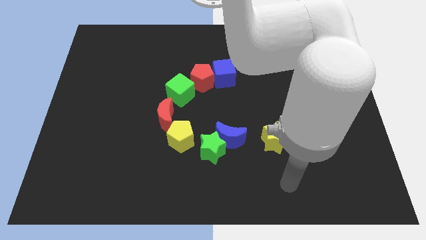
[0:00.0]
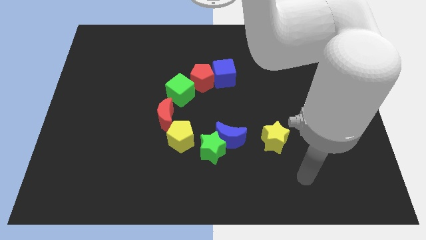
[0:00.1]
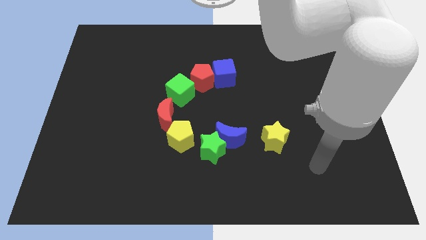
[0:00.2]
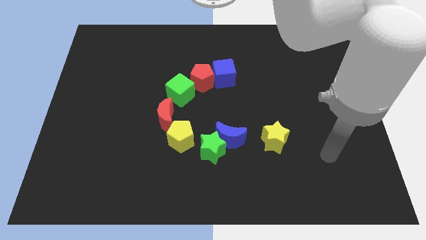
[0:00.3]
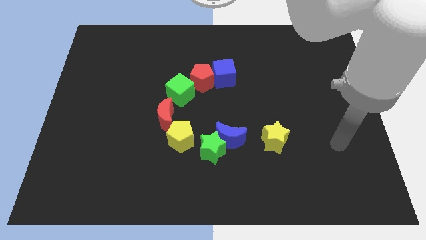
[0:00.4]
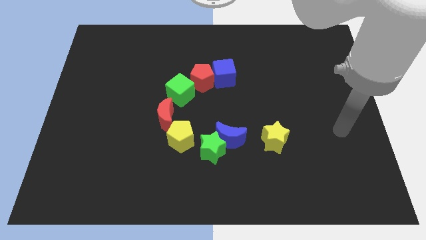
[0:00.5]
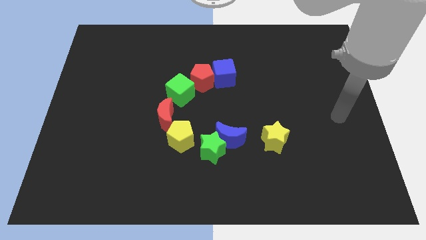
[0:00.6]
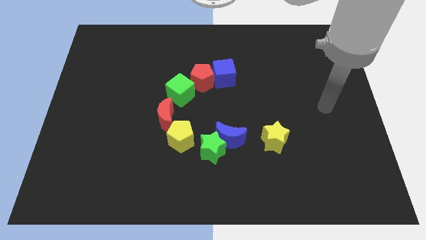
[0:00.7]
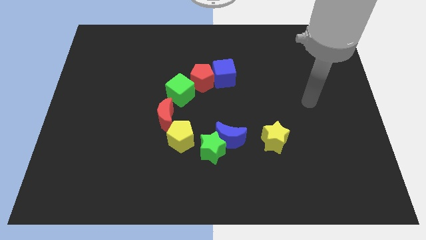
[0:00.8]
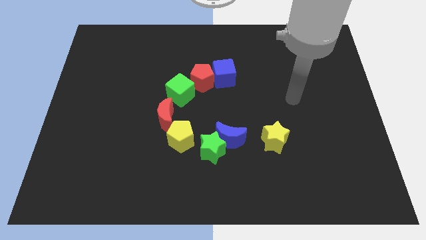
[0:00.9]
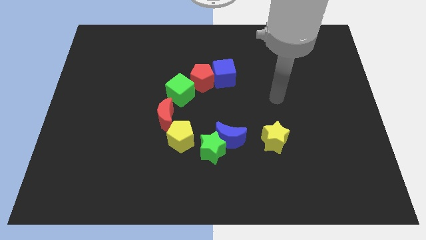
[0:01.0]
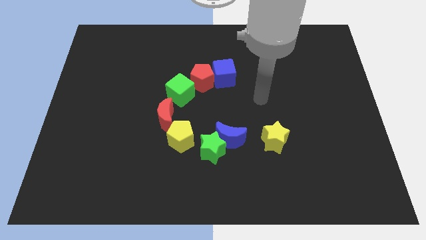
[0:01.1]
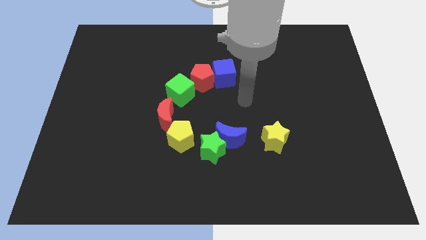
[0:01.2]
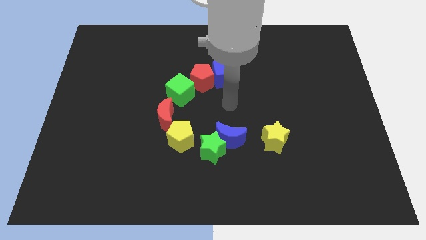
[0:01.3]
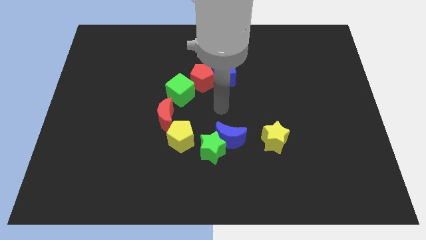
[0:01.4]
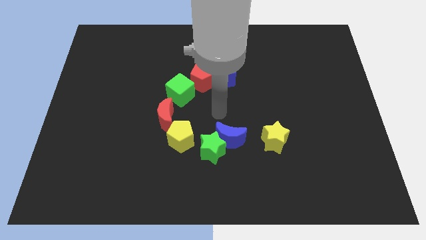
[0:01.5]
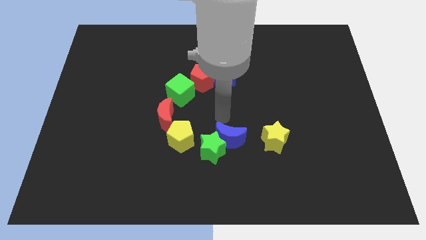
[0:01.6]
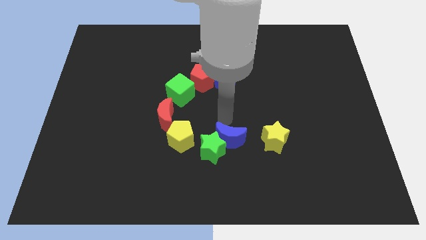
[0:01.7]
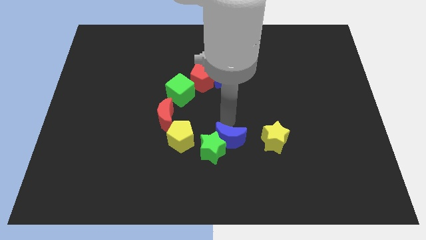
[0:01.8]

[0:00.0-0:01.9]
move the arm towards the blue crescent

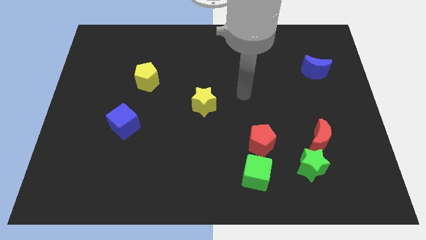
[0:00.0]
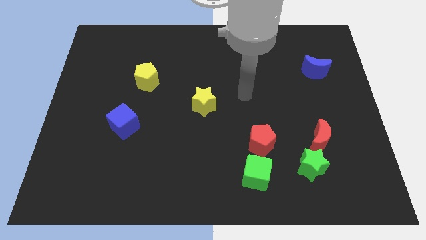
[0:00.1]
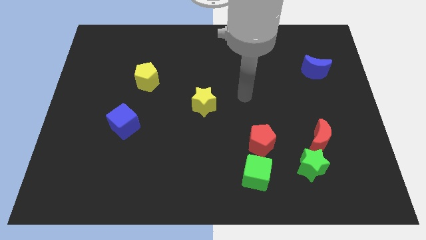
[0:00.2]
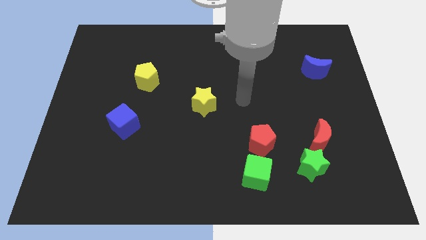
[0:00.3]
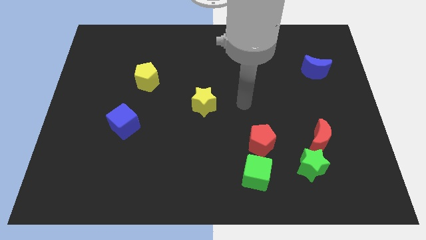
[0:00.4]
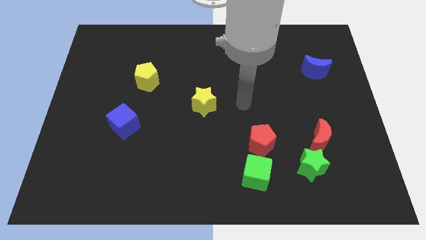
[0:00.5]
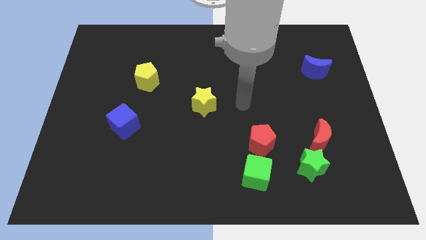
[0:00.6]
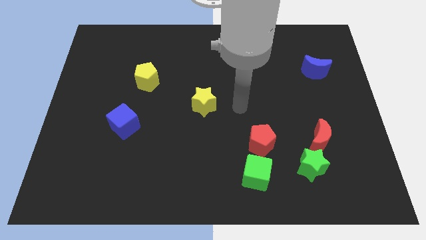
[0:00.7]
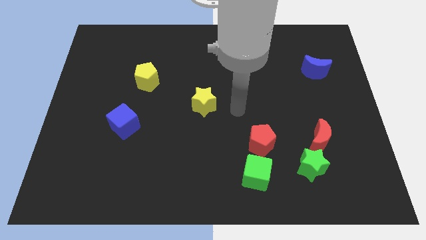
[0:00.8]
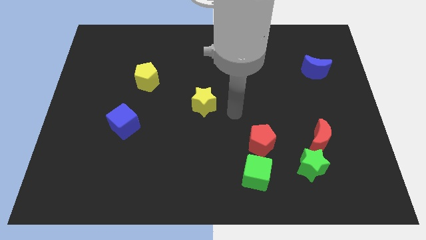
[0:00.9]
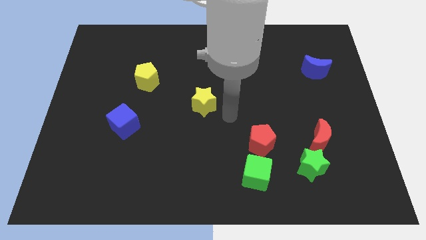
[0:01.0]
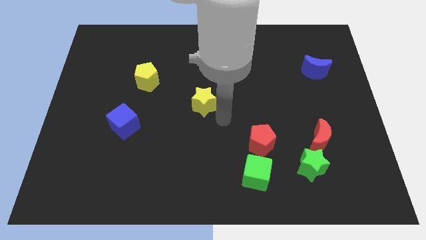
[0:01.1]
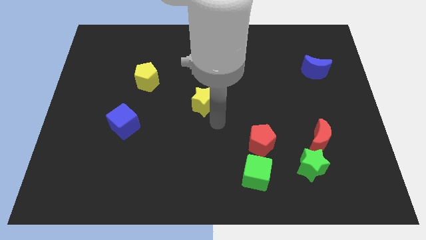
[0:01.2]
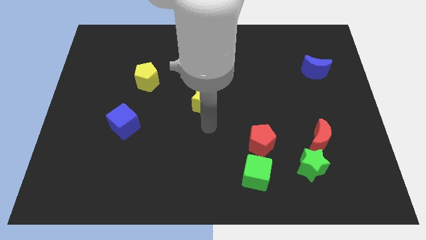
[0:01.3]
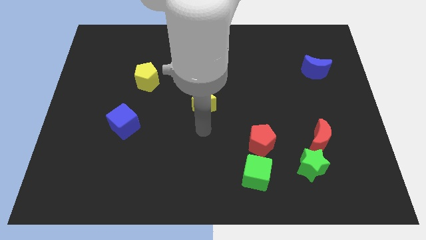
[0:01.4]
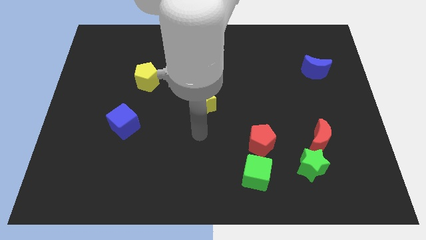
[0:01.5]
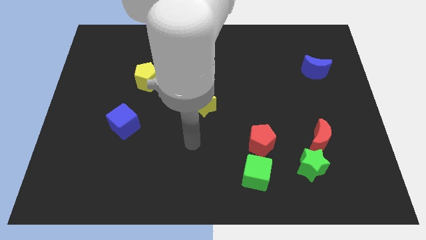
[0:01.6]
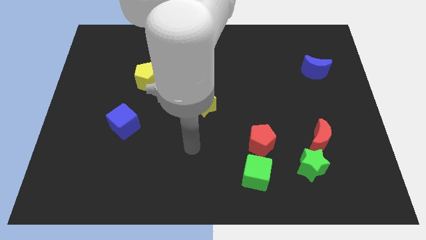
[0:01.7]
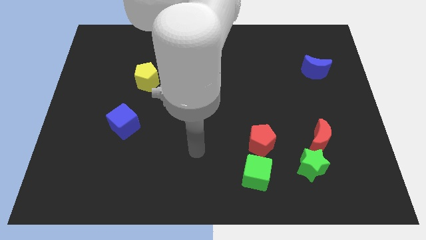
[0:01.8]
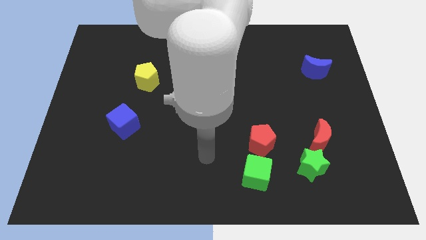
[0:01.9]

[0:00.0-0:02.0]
move your arm towards the green cube

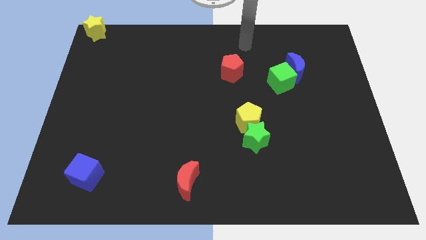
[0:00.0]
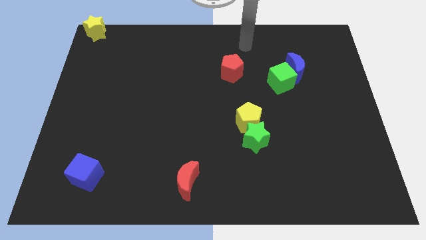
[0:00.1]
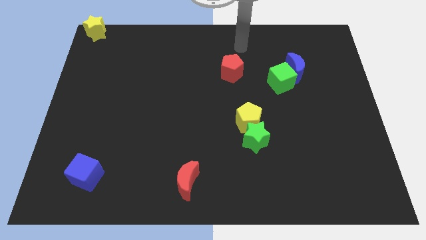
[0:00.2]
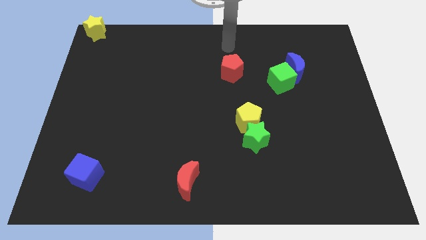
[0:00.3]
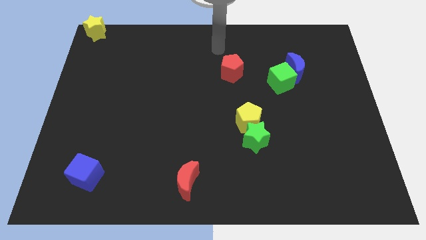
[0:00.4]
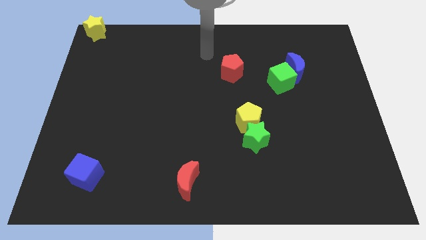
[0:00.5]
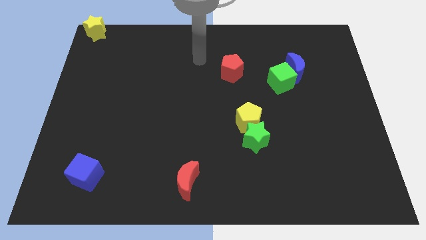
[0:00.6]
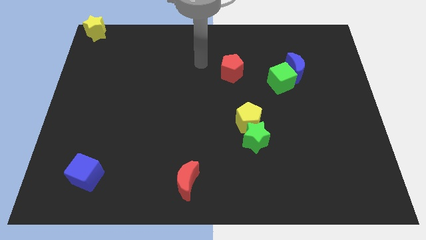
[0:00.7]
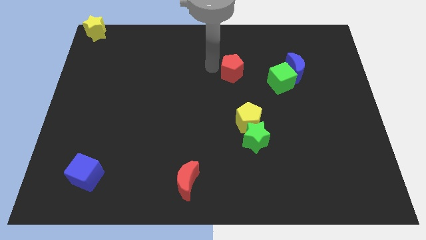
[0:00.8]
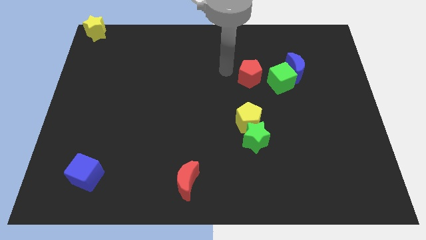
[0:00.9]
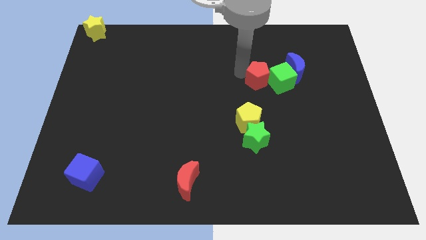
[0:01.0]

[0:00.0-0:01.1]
move the red pentagon close to the left of the green cube

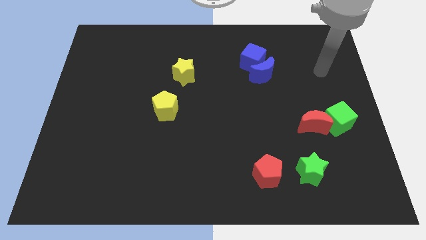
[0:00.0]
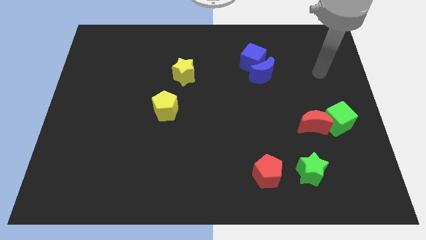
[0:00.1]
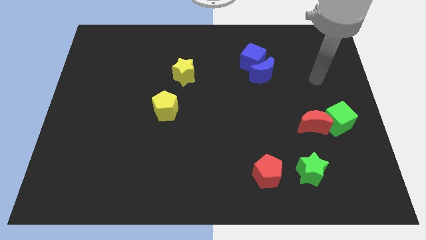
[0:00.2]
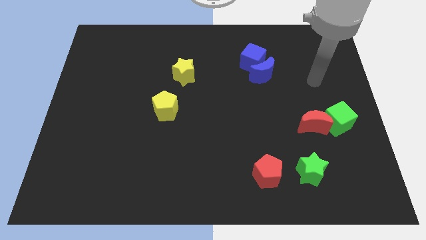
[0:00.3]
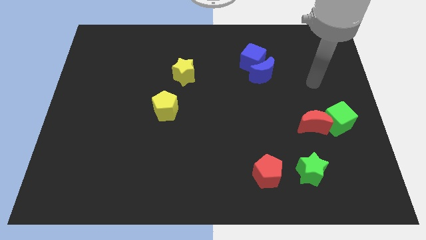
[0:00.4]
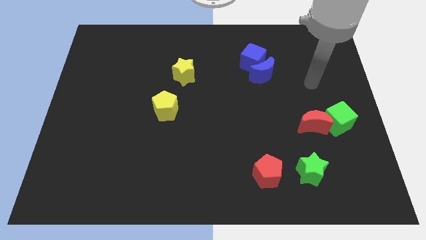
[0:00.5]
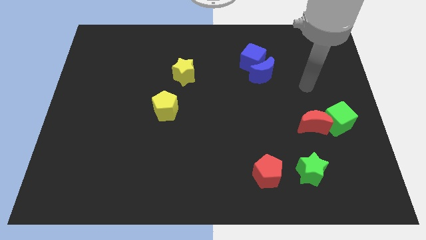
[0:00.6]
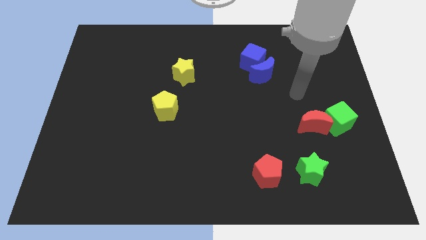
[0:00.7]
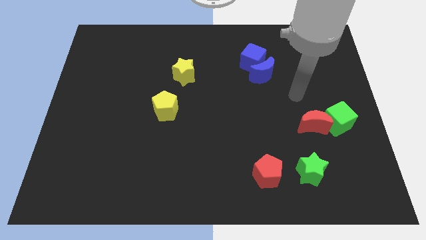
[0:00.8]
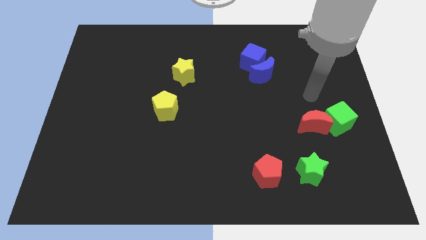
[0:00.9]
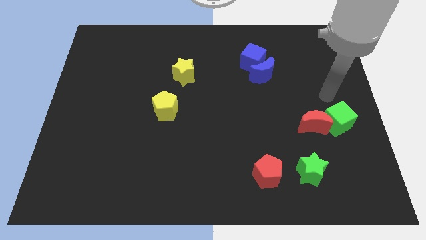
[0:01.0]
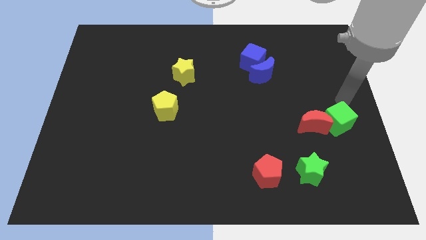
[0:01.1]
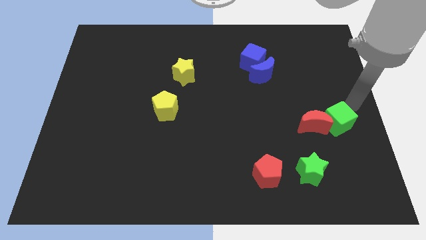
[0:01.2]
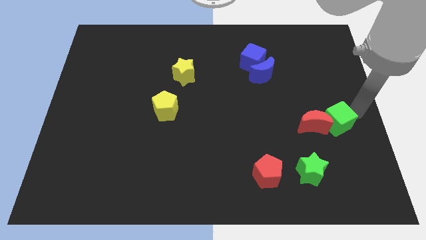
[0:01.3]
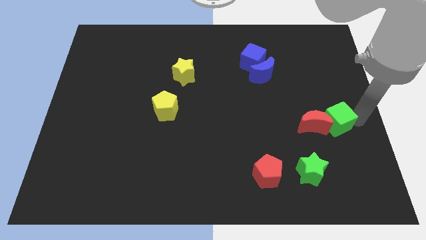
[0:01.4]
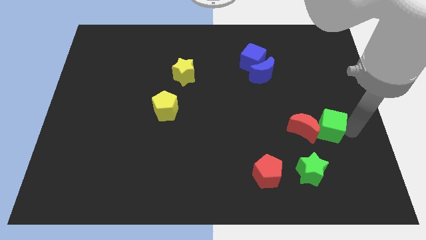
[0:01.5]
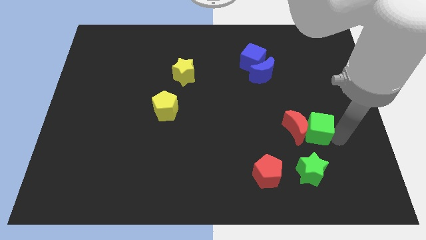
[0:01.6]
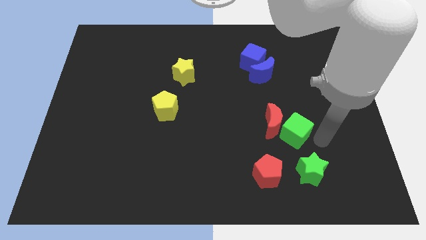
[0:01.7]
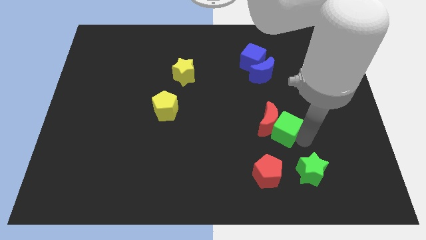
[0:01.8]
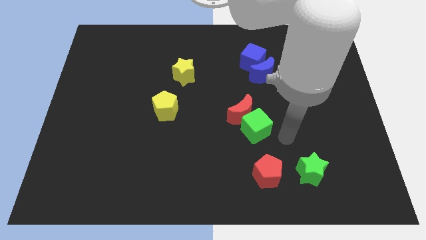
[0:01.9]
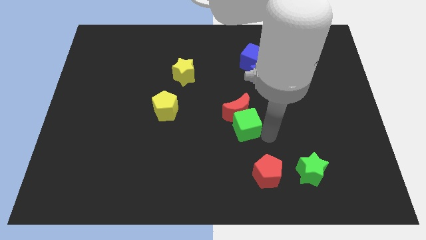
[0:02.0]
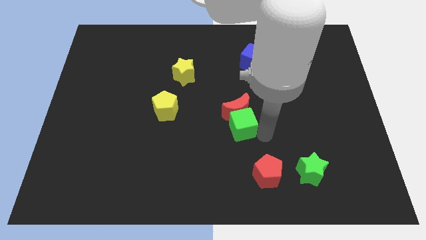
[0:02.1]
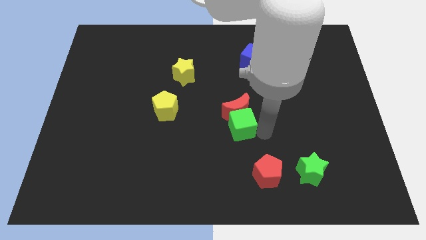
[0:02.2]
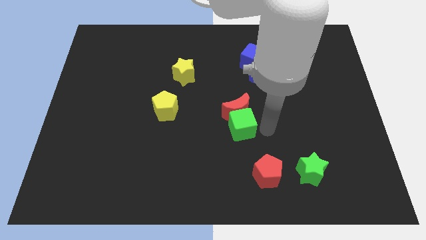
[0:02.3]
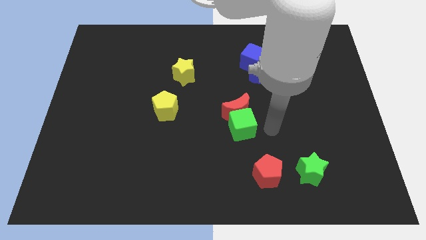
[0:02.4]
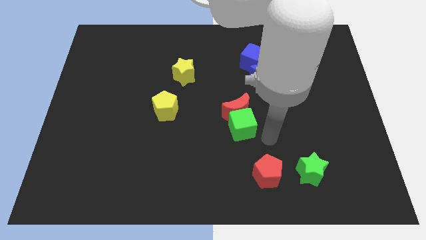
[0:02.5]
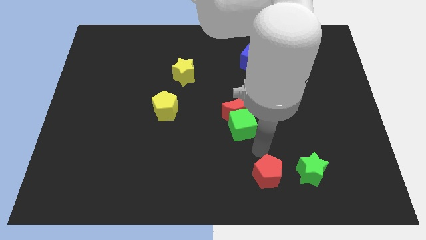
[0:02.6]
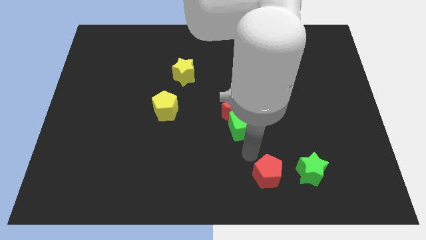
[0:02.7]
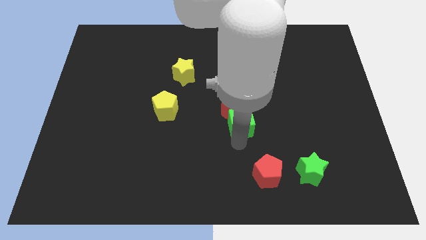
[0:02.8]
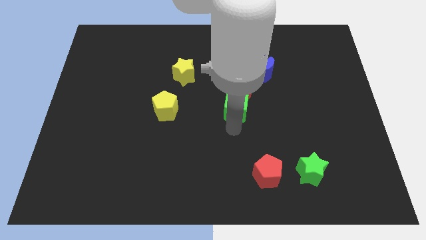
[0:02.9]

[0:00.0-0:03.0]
move the green cube diagonally to red pentagon

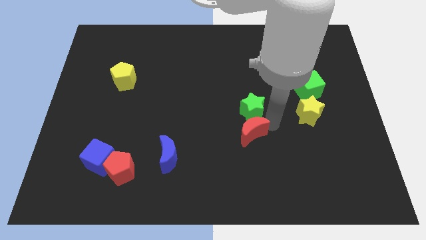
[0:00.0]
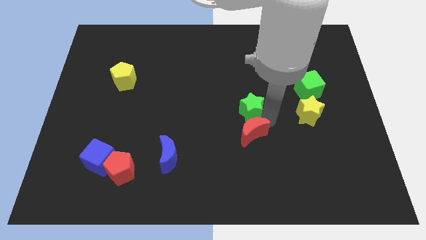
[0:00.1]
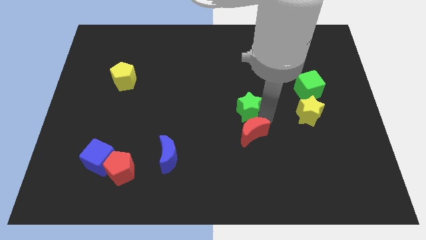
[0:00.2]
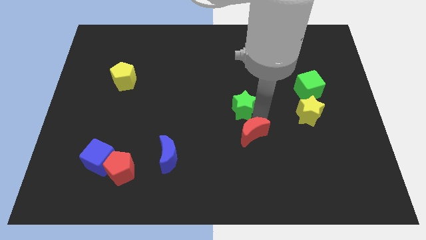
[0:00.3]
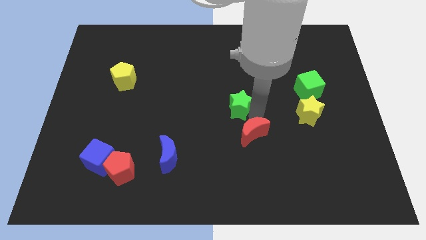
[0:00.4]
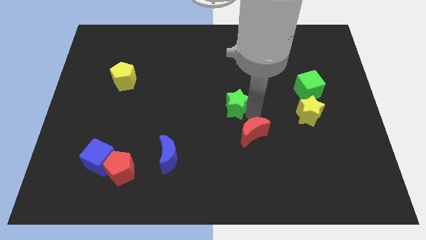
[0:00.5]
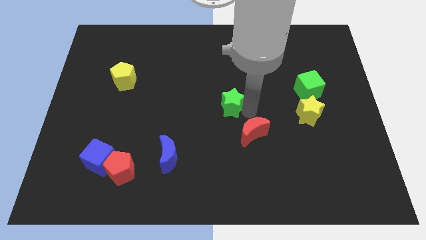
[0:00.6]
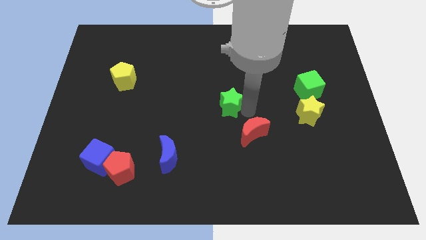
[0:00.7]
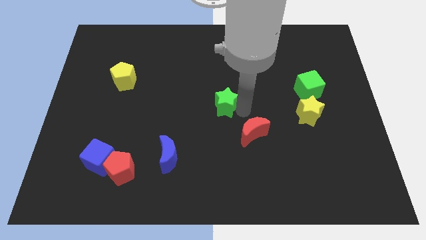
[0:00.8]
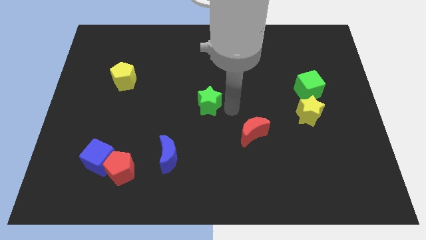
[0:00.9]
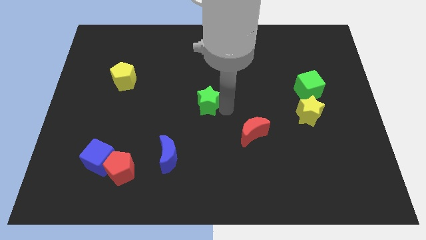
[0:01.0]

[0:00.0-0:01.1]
move the green star to the center
